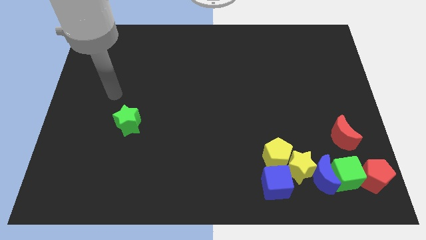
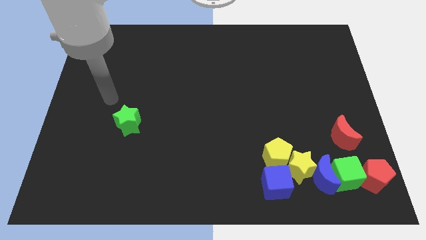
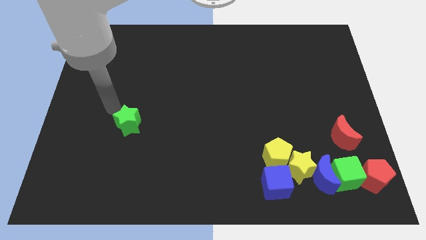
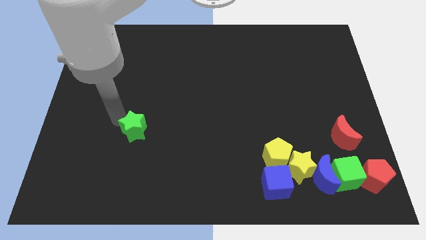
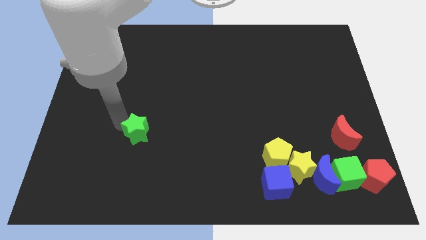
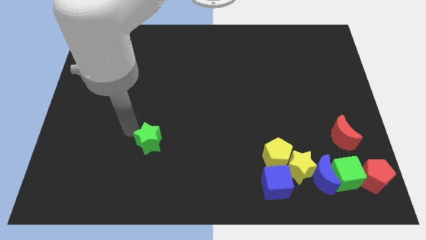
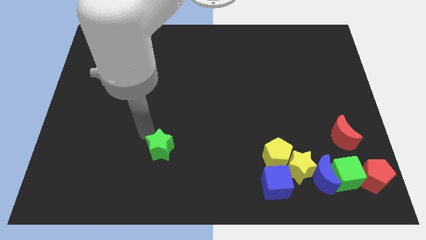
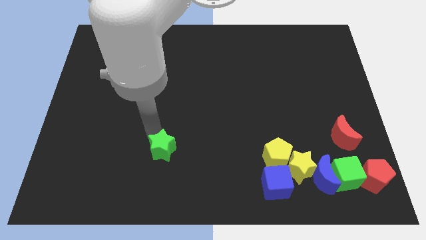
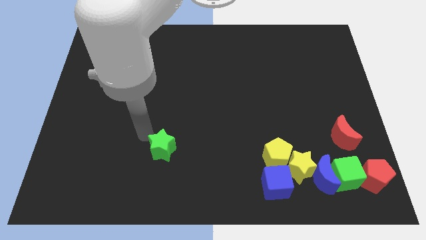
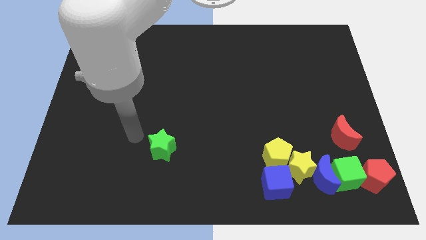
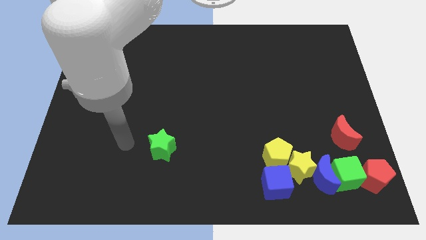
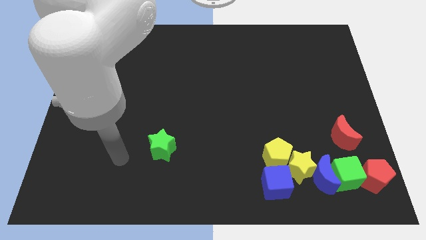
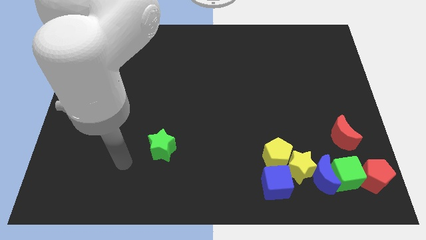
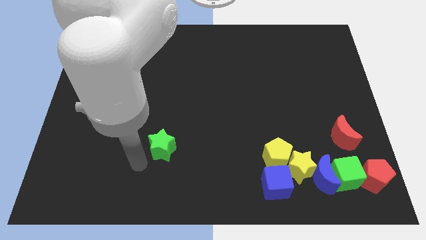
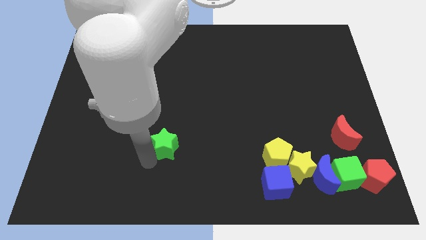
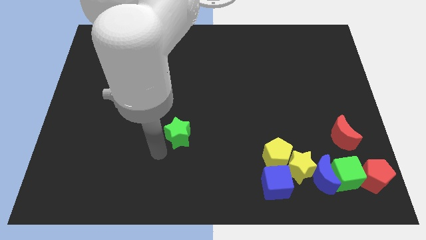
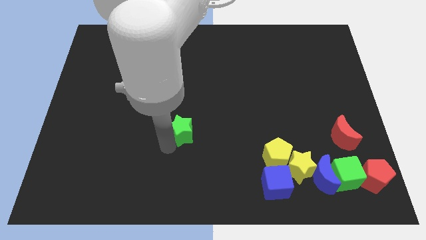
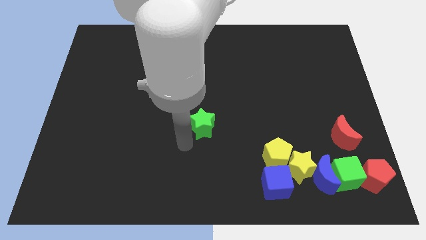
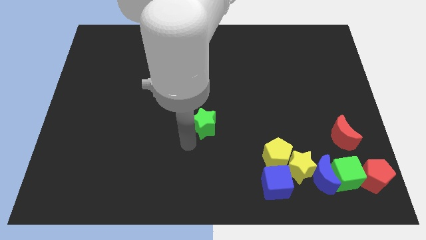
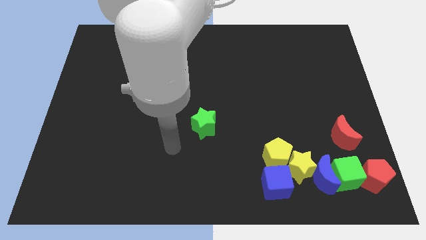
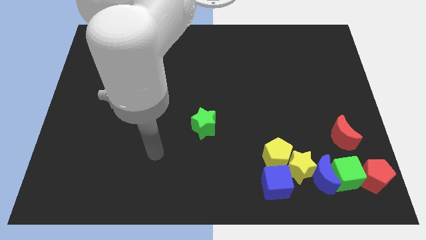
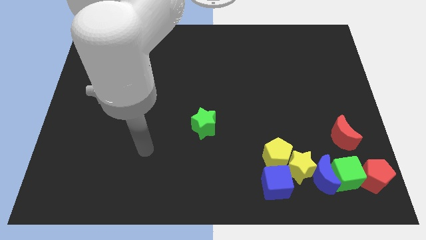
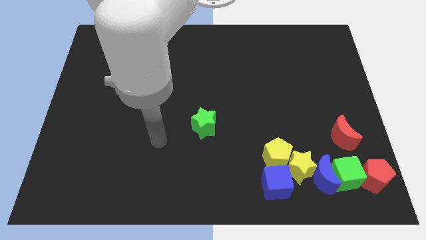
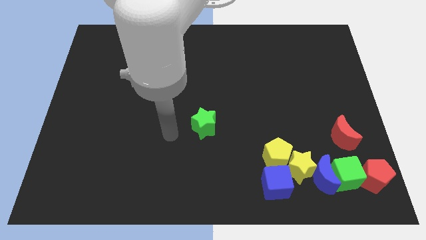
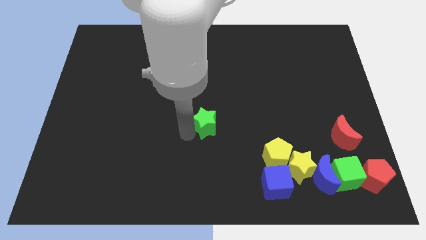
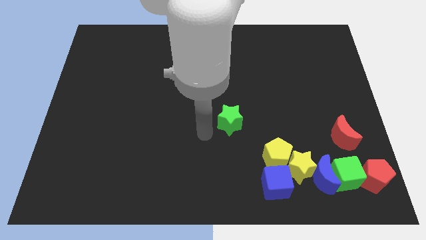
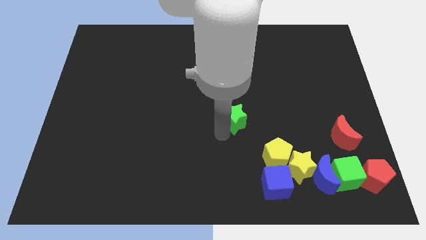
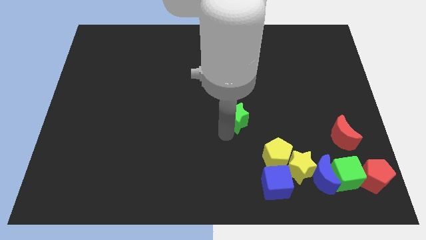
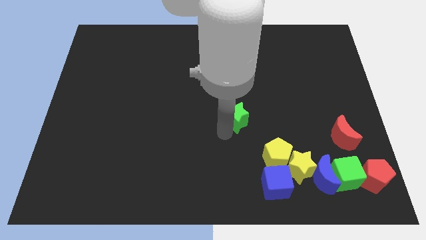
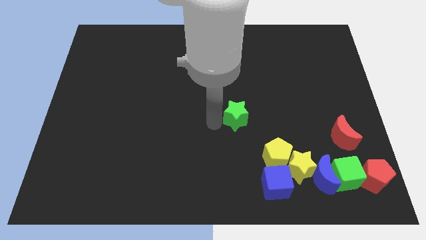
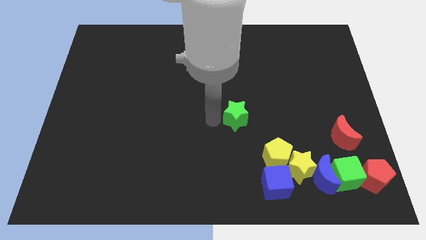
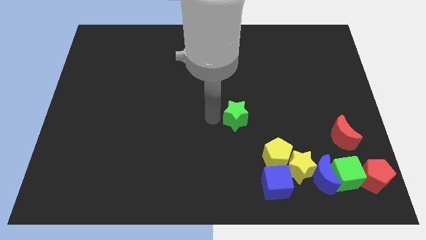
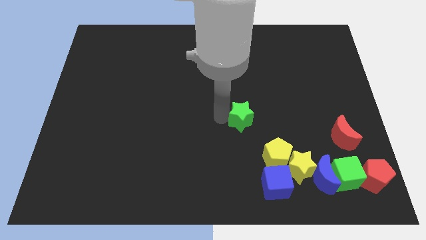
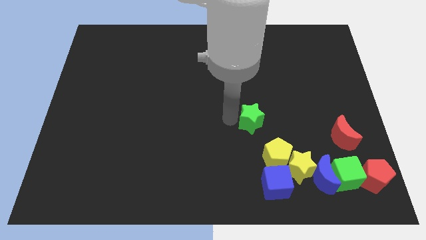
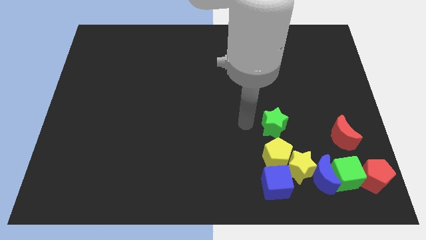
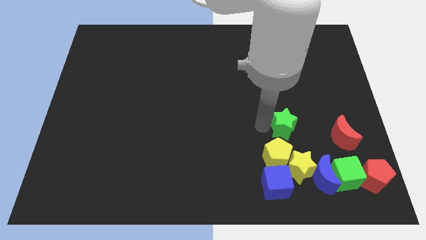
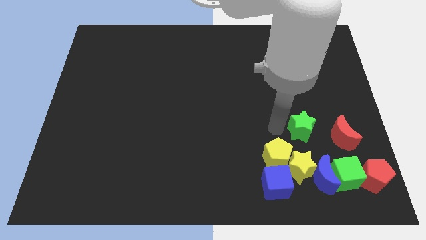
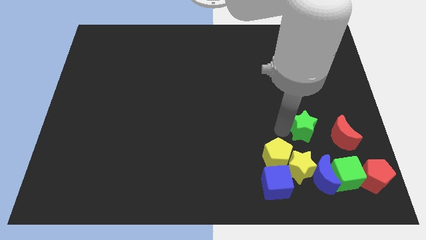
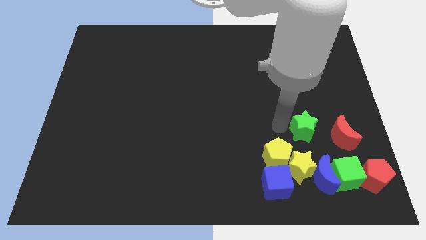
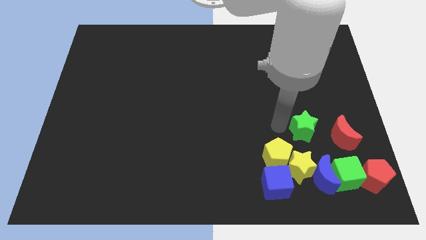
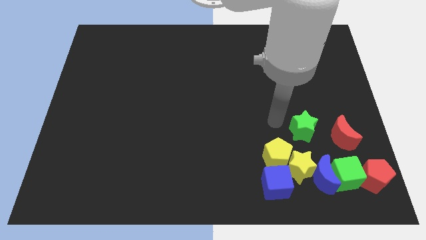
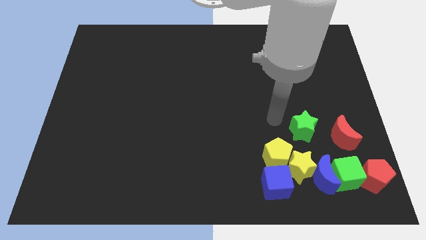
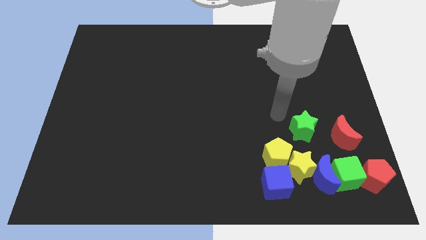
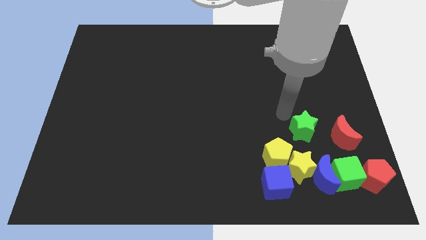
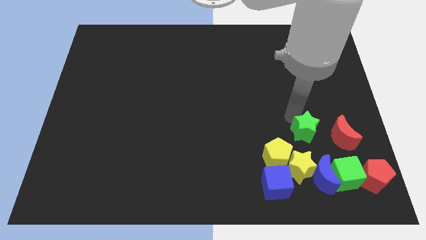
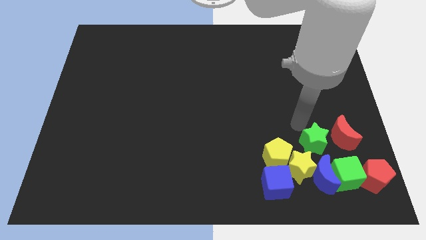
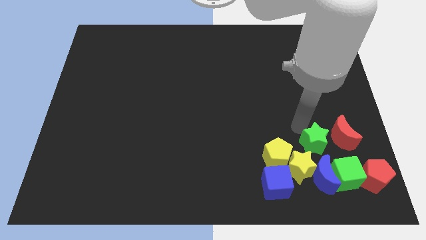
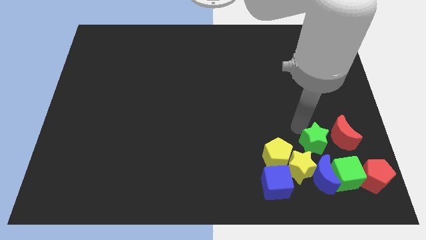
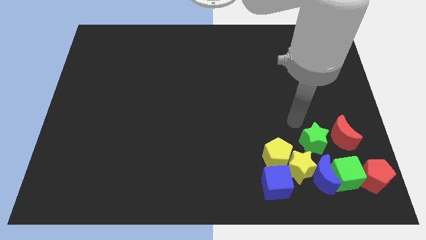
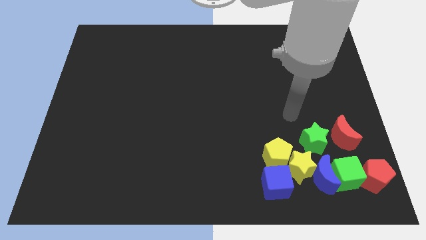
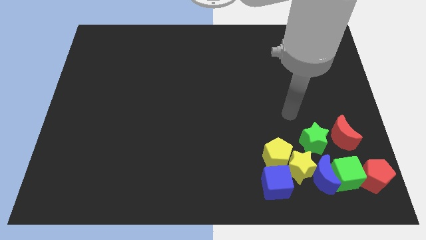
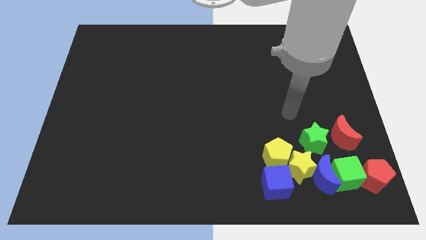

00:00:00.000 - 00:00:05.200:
move green star above blue moon

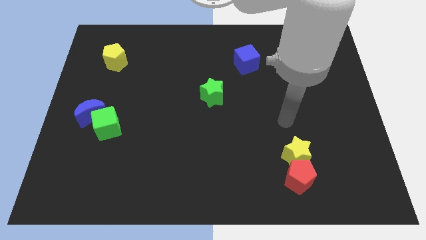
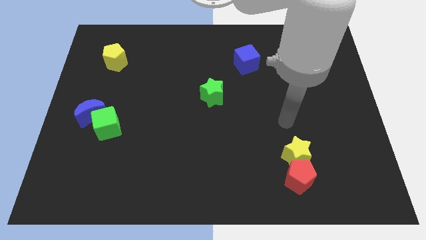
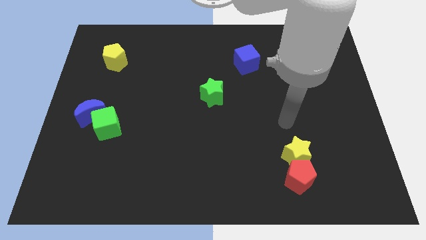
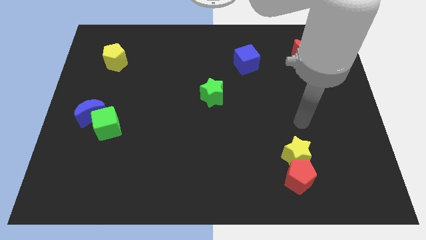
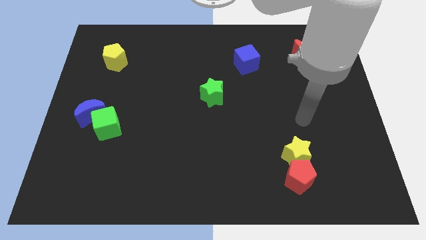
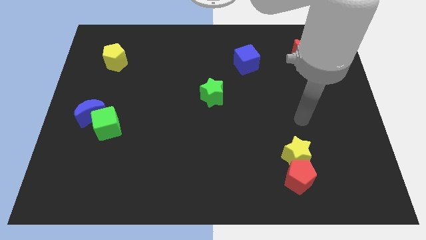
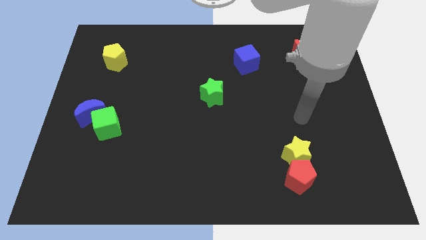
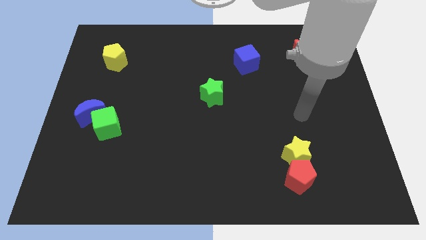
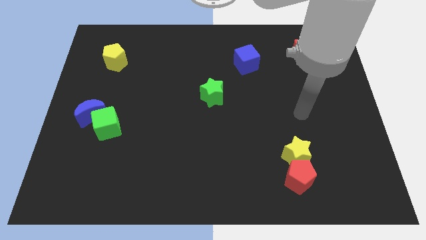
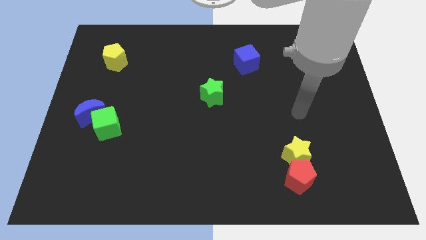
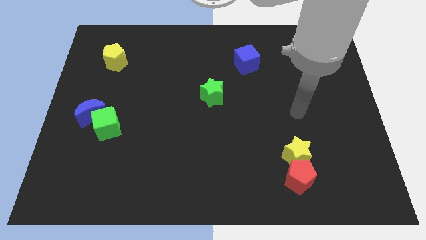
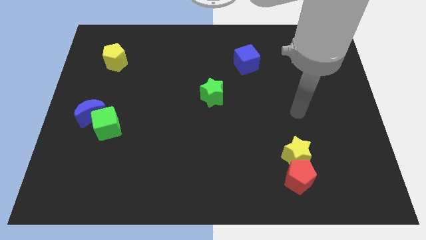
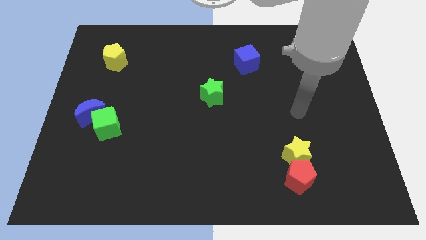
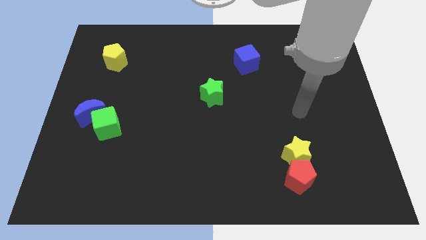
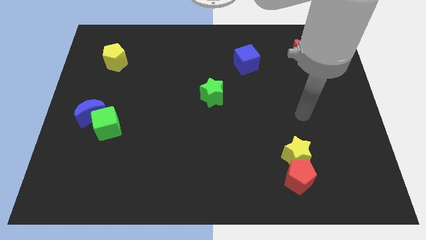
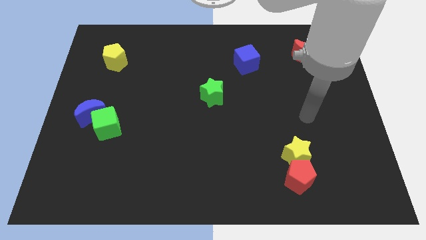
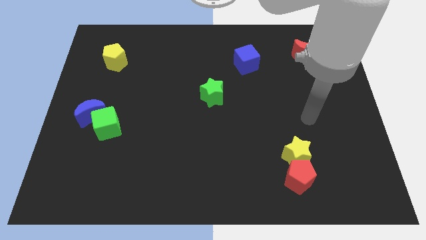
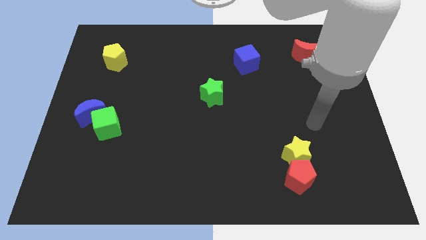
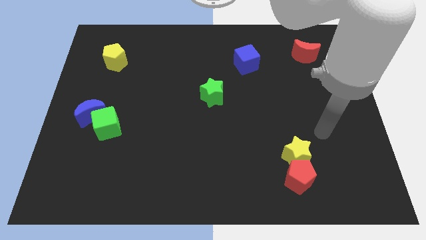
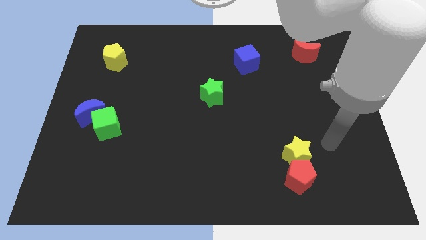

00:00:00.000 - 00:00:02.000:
place your arm to the right of the yellow star

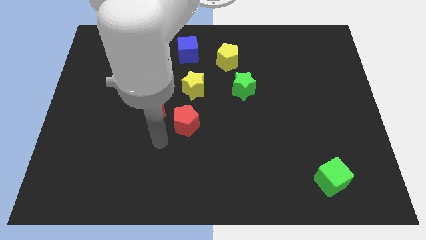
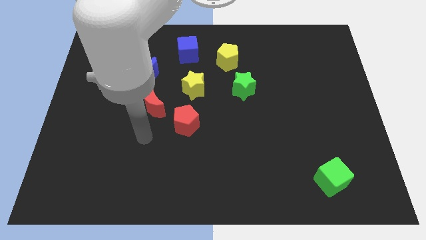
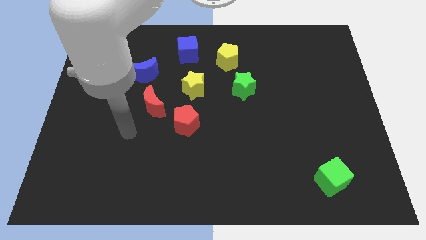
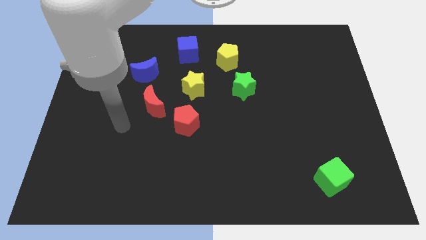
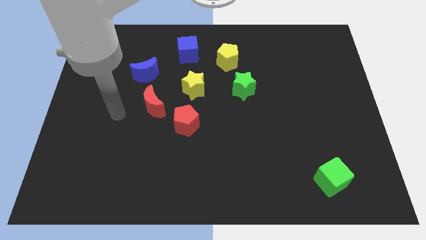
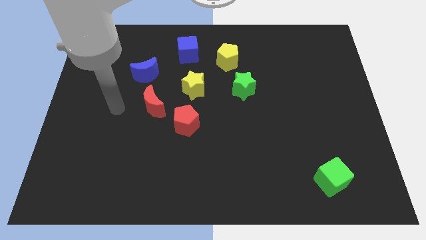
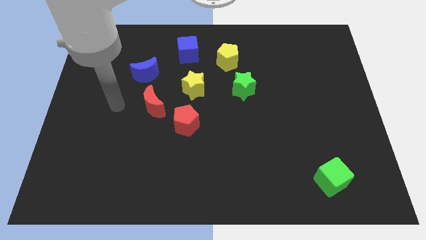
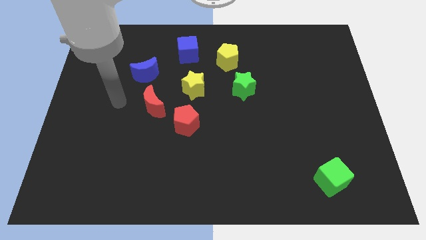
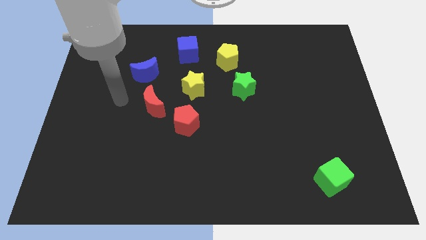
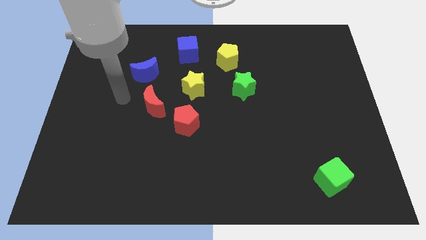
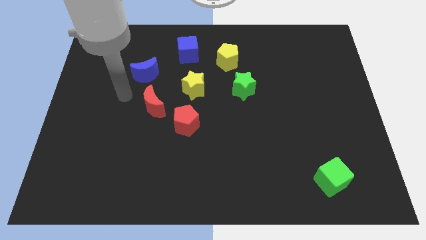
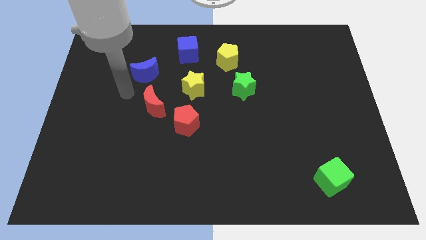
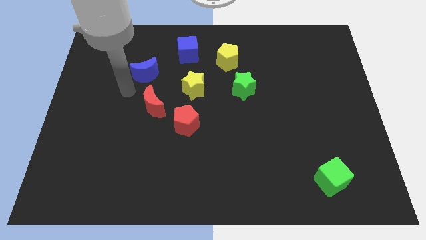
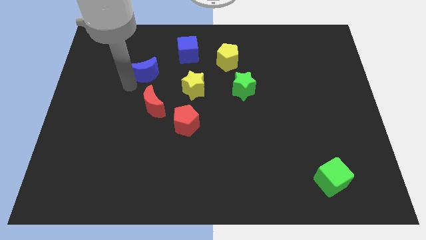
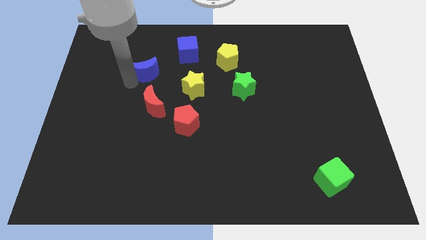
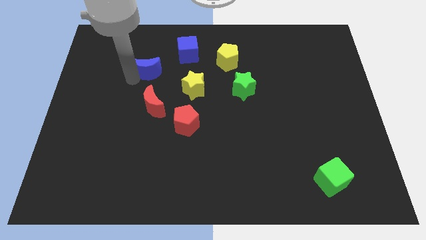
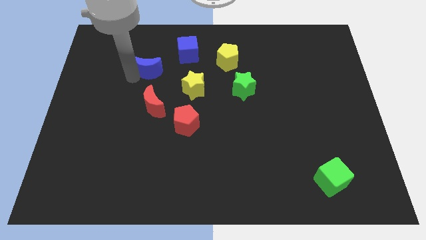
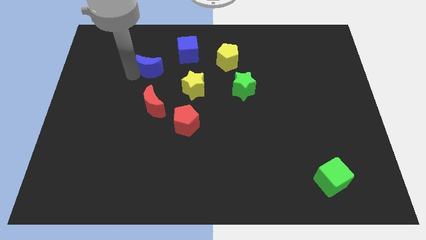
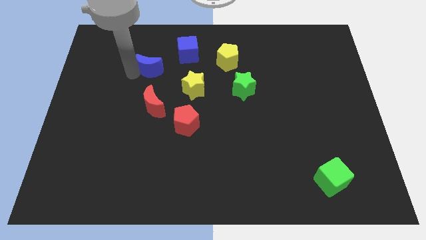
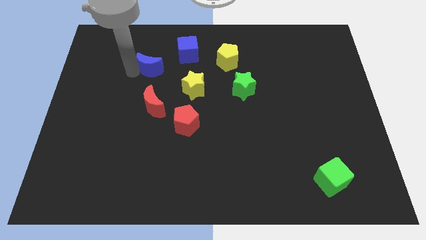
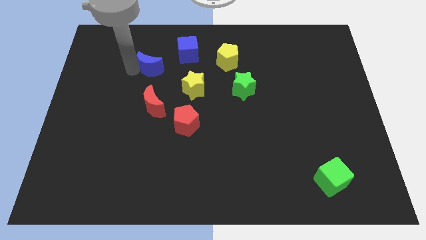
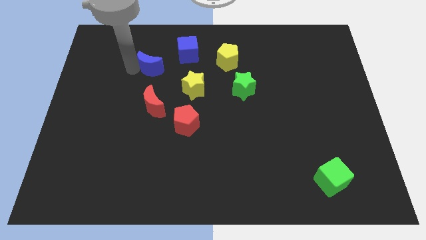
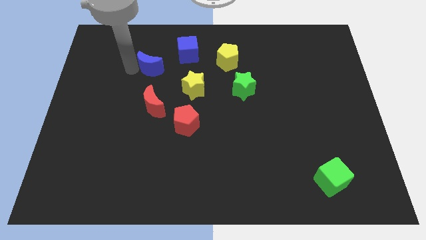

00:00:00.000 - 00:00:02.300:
move the blue moon slightly up
